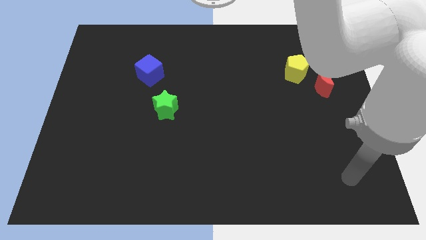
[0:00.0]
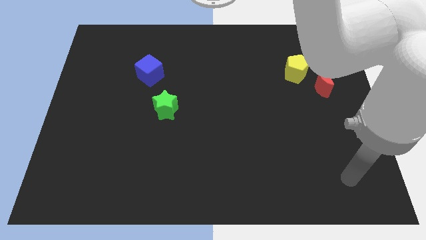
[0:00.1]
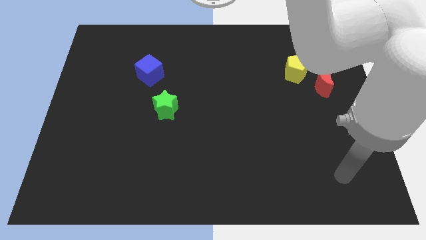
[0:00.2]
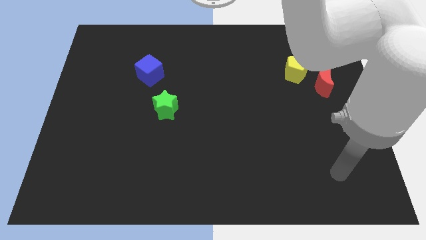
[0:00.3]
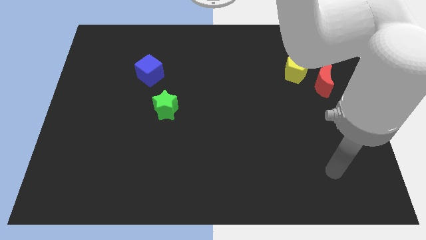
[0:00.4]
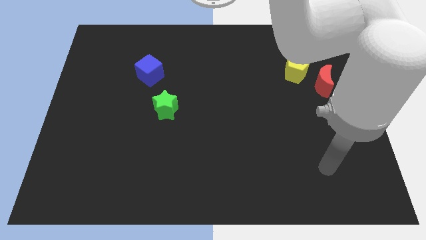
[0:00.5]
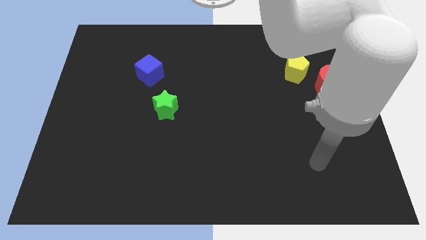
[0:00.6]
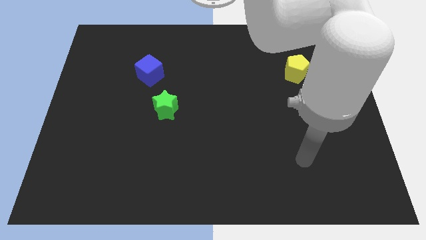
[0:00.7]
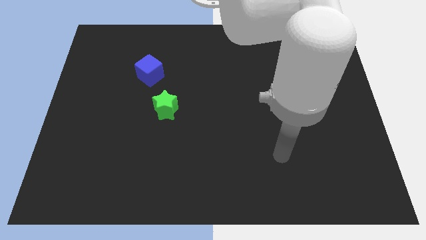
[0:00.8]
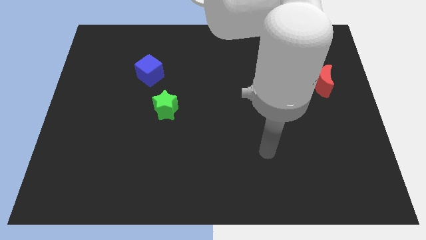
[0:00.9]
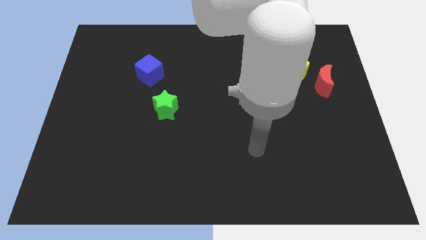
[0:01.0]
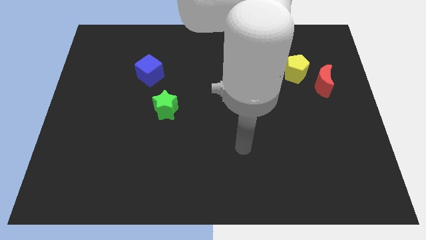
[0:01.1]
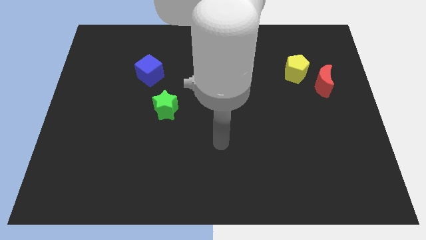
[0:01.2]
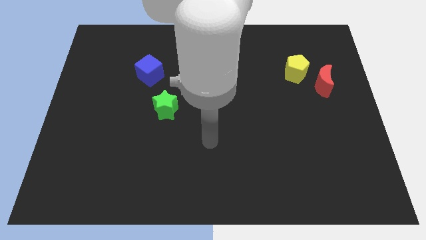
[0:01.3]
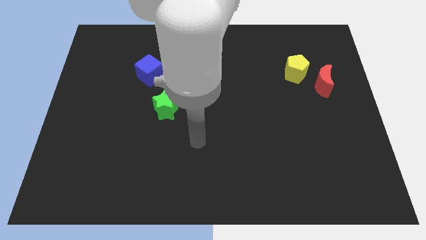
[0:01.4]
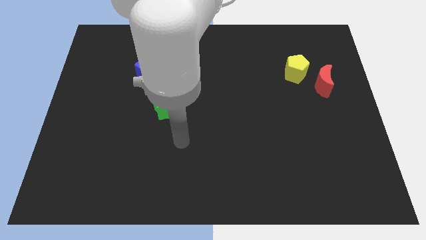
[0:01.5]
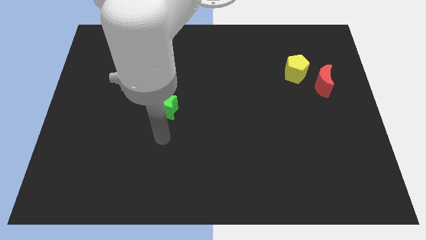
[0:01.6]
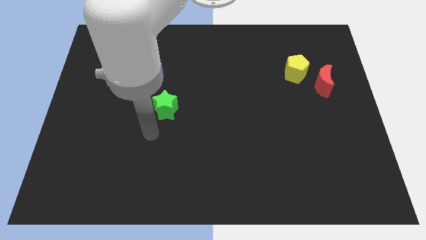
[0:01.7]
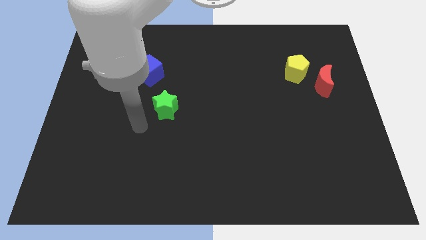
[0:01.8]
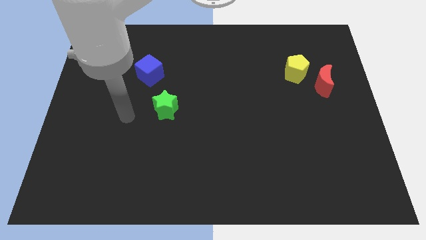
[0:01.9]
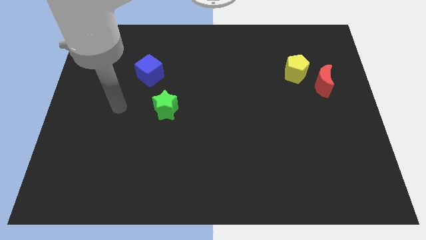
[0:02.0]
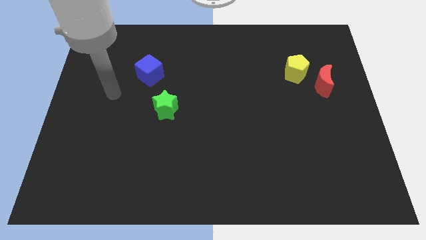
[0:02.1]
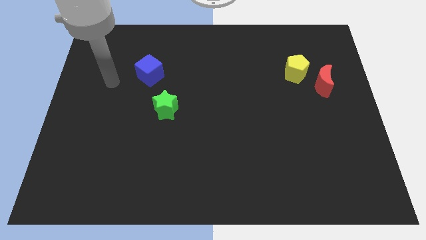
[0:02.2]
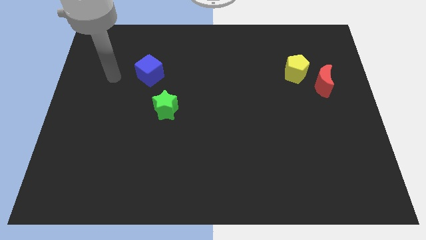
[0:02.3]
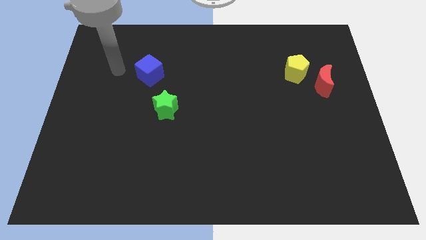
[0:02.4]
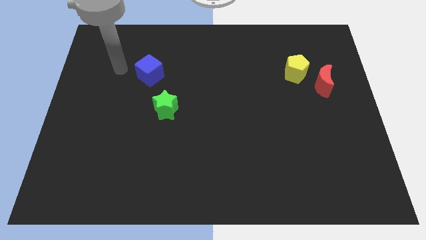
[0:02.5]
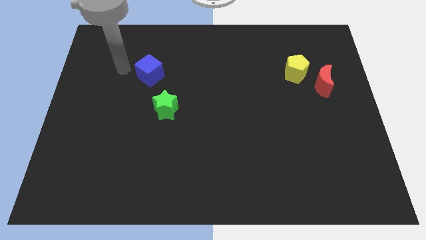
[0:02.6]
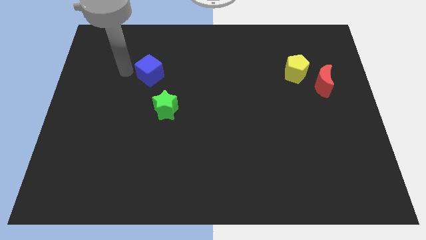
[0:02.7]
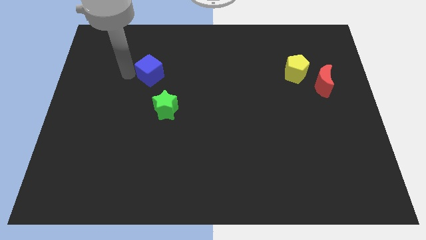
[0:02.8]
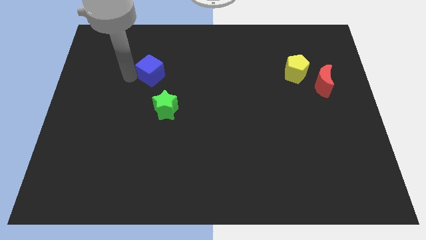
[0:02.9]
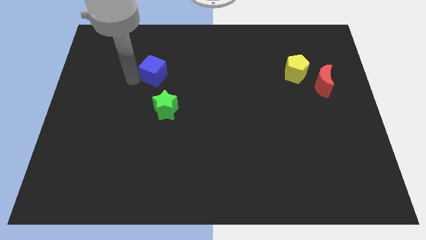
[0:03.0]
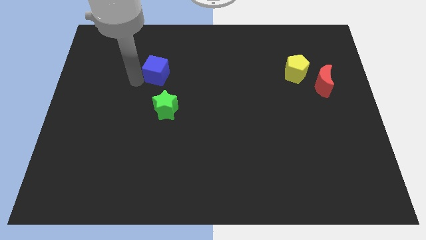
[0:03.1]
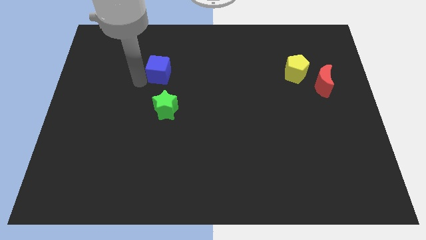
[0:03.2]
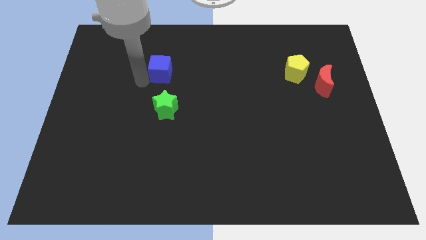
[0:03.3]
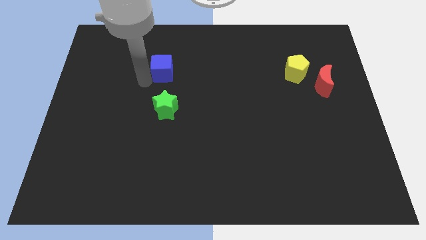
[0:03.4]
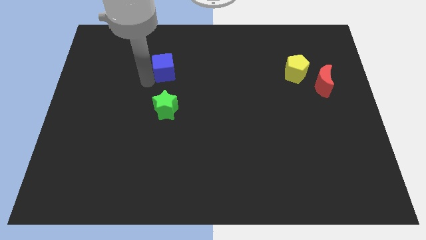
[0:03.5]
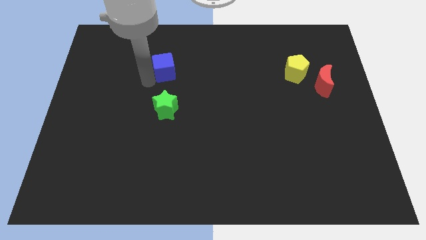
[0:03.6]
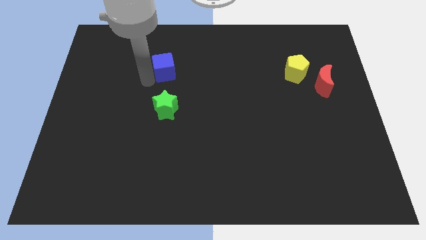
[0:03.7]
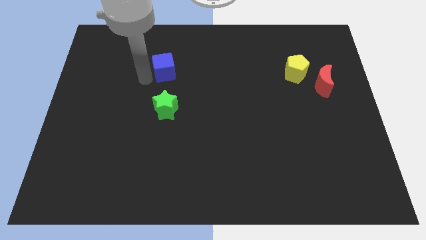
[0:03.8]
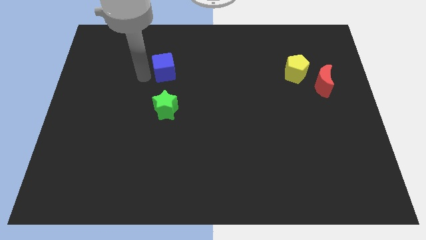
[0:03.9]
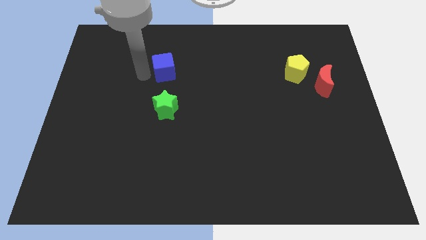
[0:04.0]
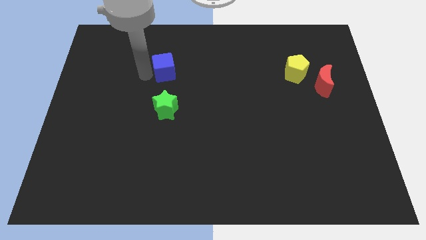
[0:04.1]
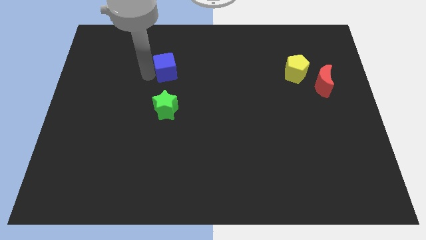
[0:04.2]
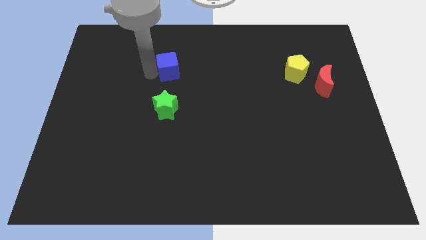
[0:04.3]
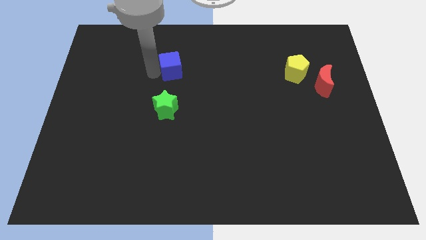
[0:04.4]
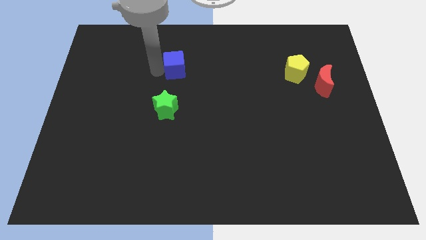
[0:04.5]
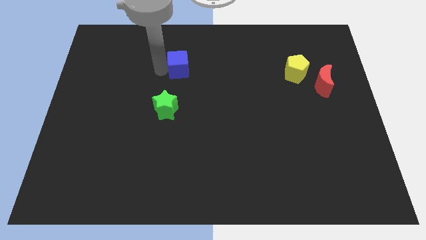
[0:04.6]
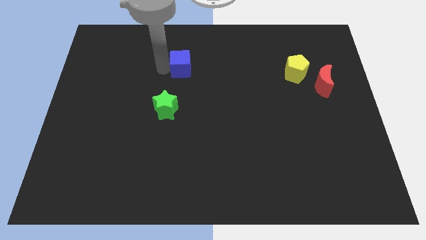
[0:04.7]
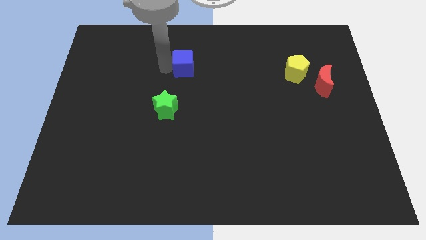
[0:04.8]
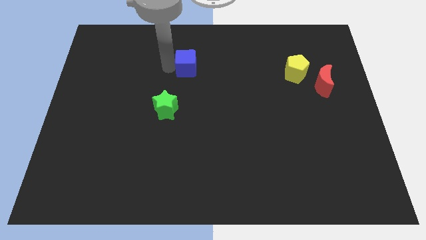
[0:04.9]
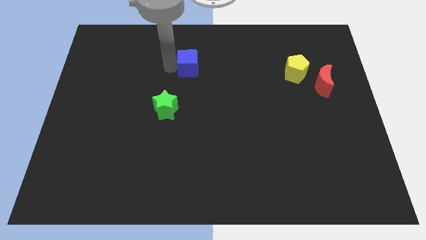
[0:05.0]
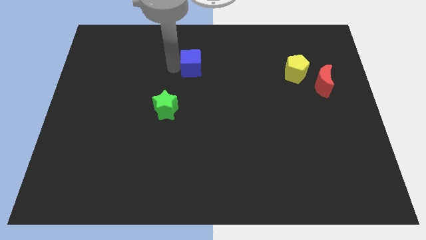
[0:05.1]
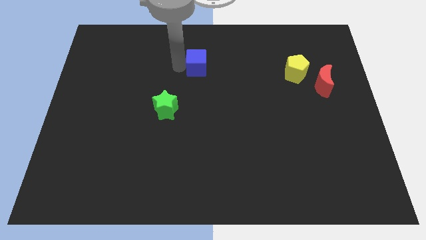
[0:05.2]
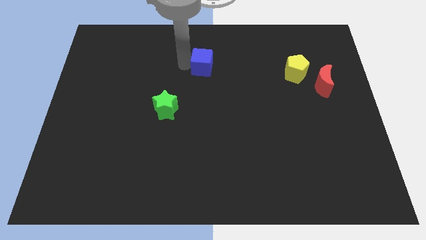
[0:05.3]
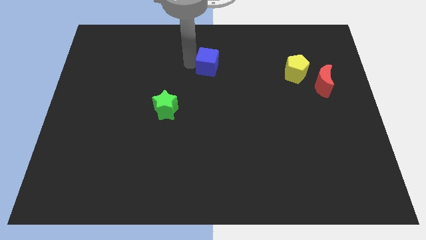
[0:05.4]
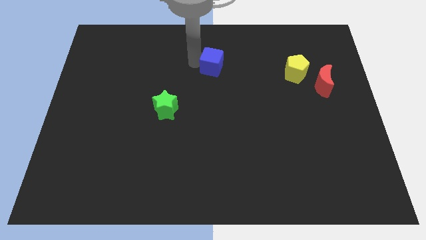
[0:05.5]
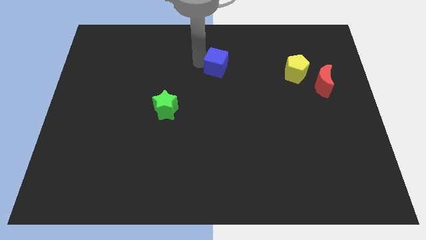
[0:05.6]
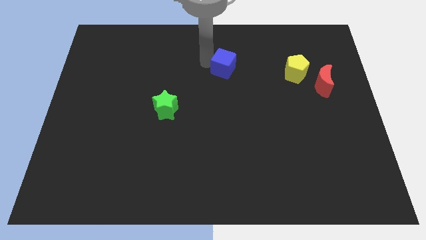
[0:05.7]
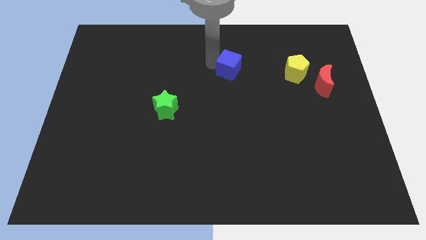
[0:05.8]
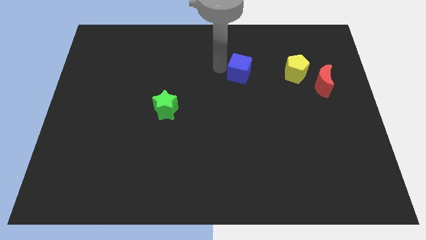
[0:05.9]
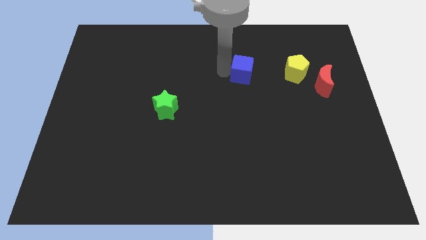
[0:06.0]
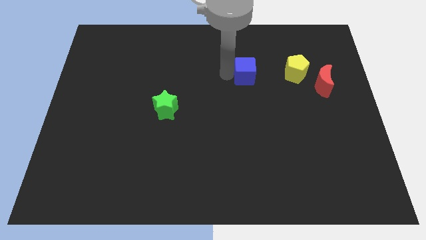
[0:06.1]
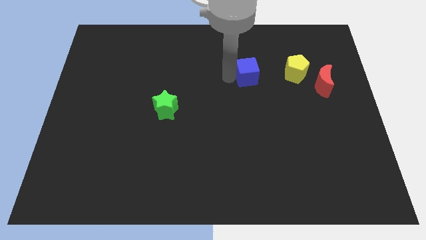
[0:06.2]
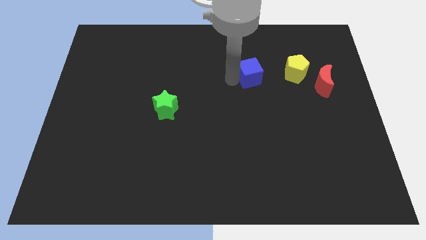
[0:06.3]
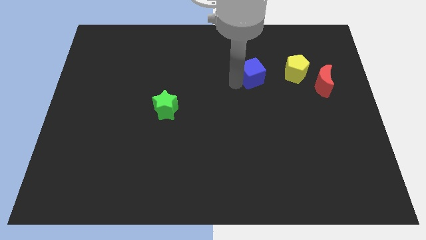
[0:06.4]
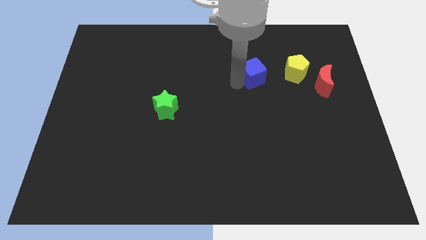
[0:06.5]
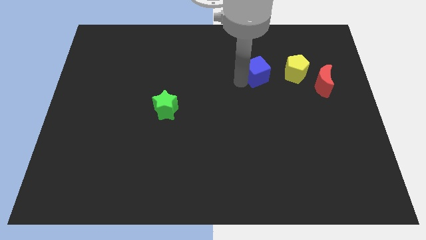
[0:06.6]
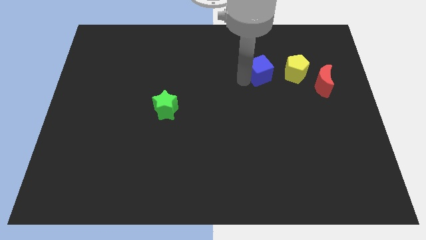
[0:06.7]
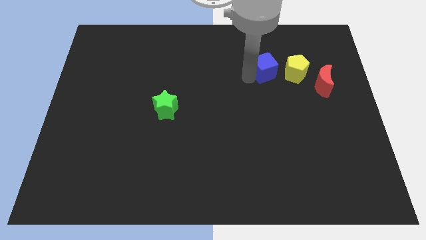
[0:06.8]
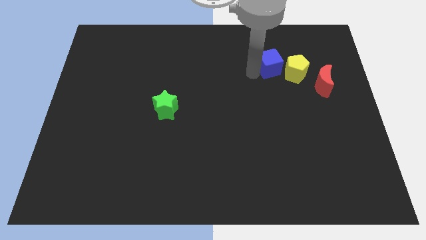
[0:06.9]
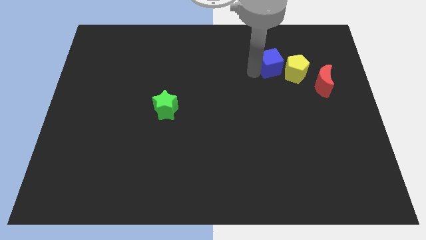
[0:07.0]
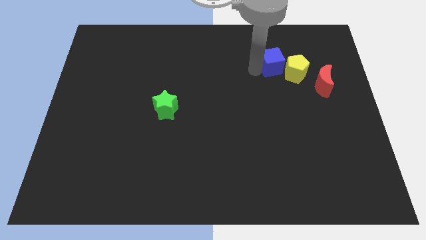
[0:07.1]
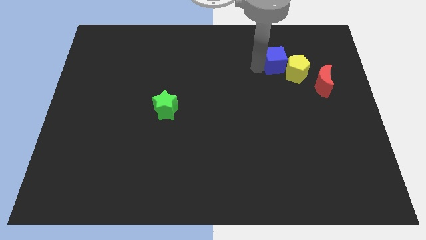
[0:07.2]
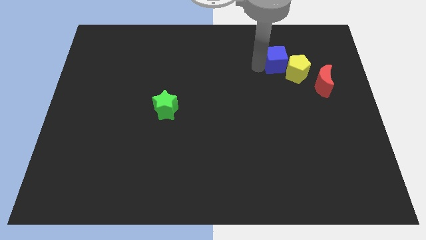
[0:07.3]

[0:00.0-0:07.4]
move the blue block to the yellow block

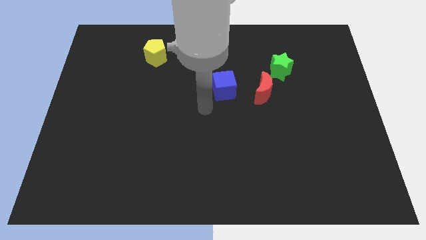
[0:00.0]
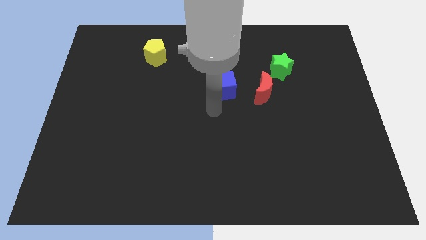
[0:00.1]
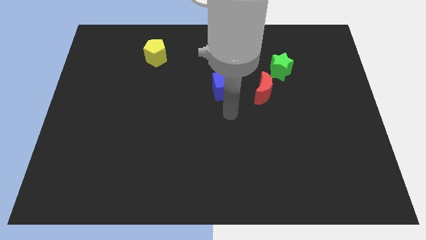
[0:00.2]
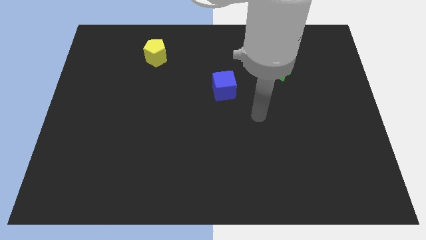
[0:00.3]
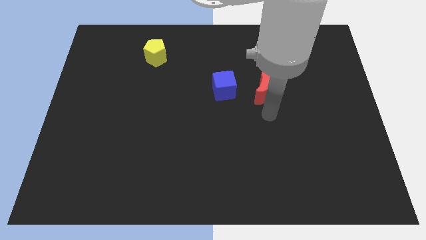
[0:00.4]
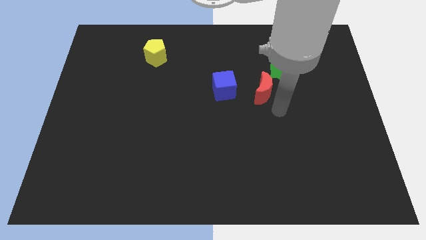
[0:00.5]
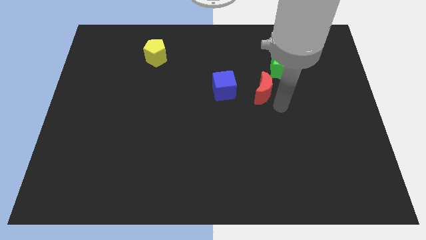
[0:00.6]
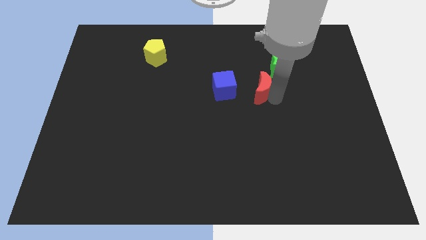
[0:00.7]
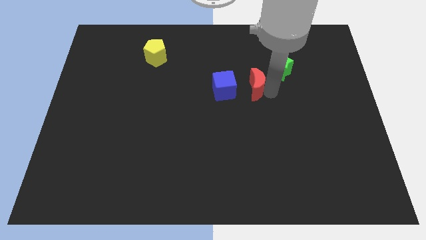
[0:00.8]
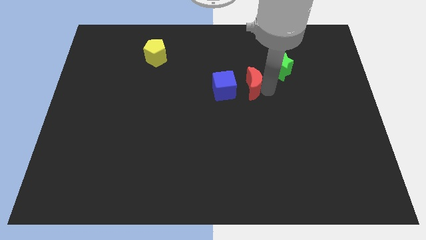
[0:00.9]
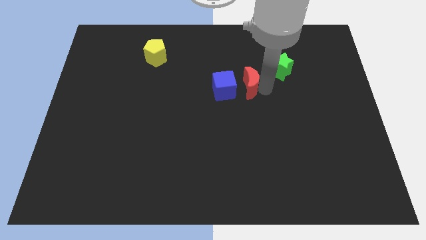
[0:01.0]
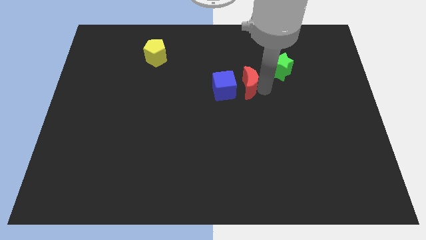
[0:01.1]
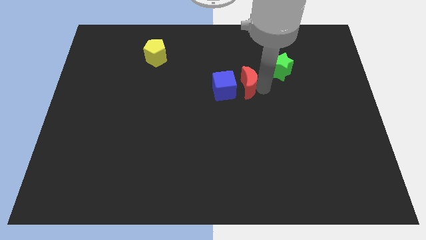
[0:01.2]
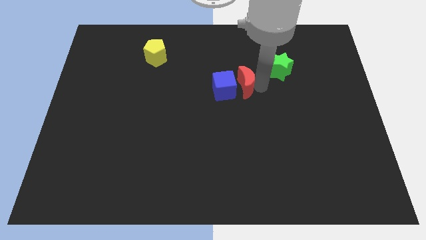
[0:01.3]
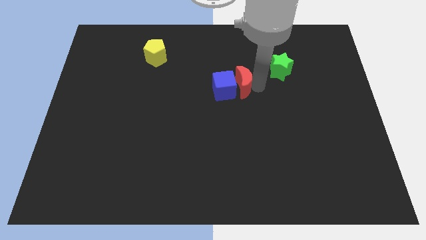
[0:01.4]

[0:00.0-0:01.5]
move the red block towards the blue cube
